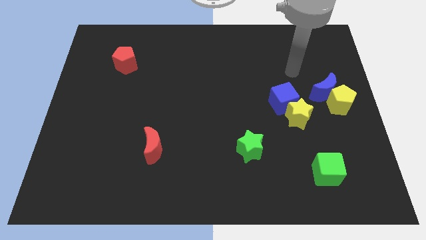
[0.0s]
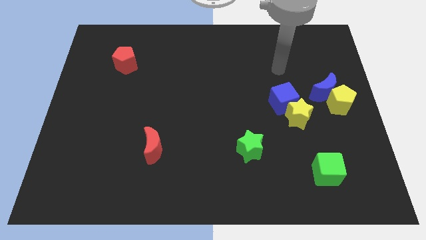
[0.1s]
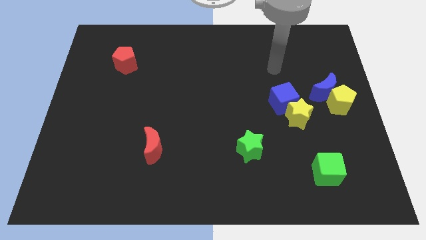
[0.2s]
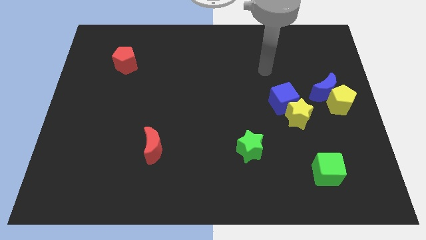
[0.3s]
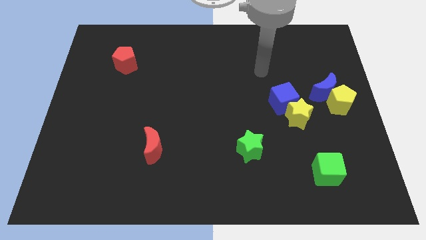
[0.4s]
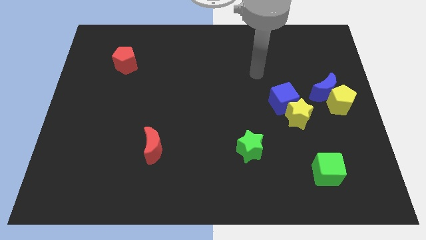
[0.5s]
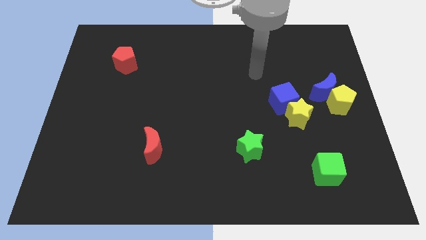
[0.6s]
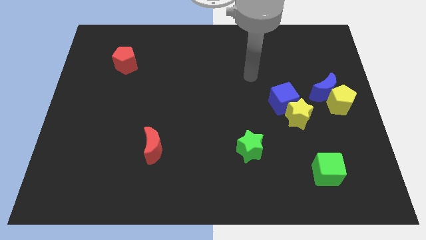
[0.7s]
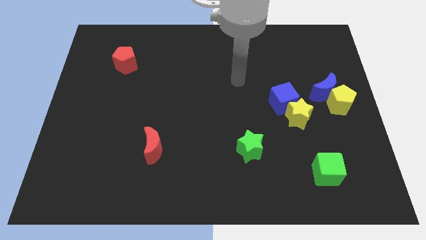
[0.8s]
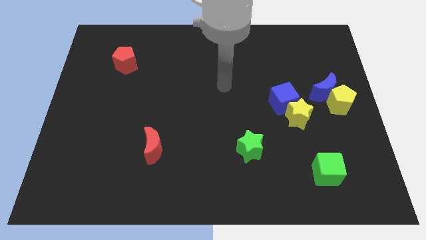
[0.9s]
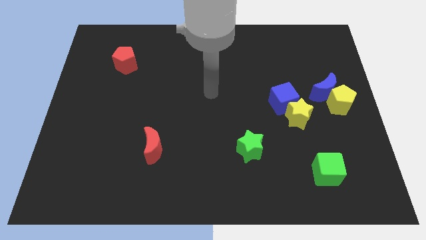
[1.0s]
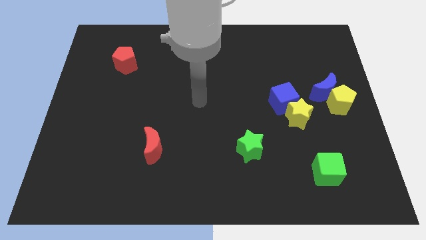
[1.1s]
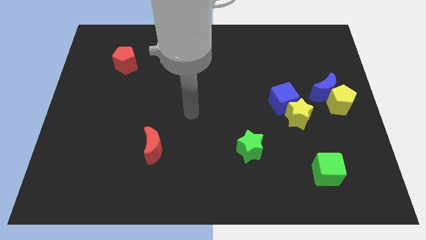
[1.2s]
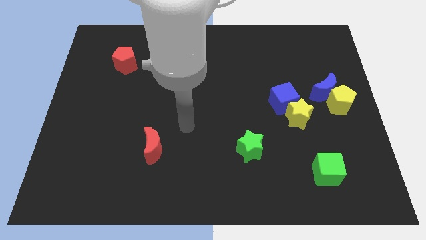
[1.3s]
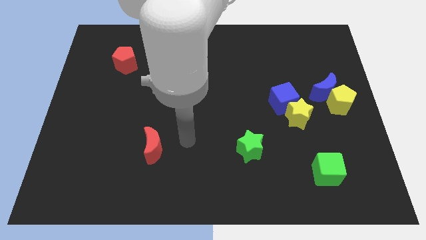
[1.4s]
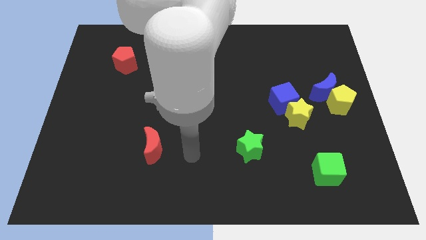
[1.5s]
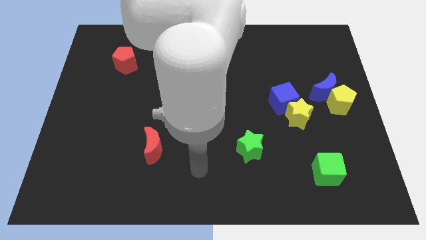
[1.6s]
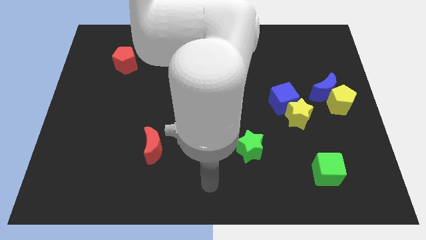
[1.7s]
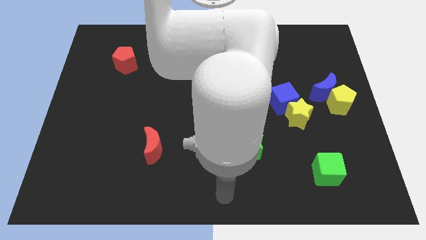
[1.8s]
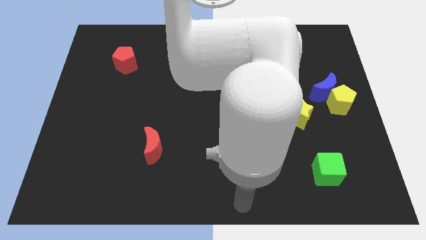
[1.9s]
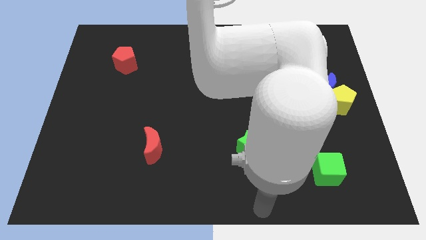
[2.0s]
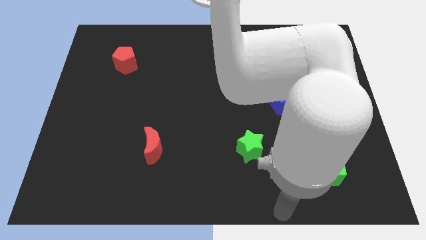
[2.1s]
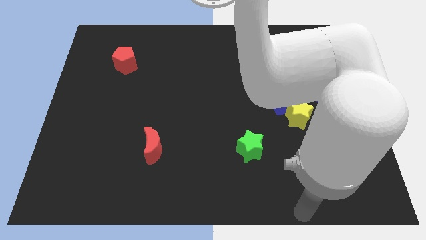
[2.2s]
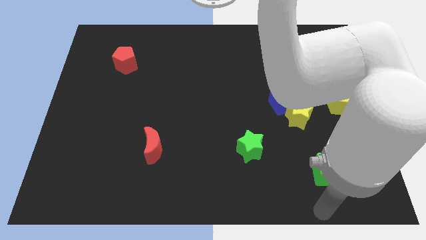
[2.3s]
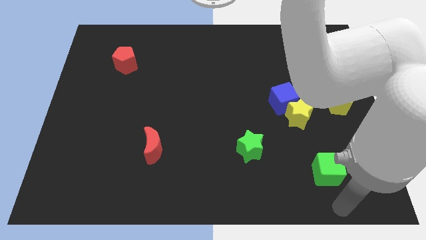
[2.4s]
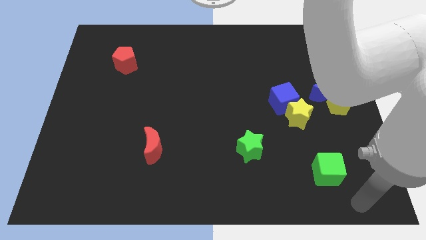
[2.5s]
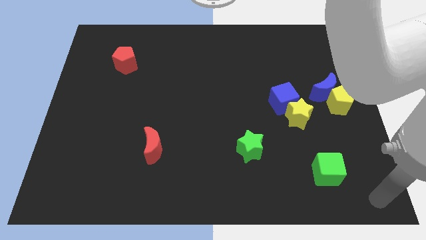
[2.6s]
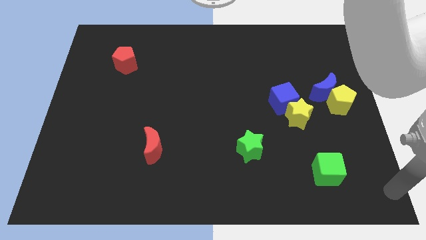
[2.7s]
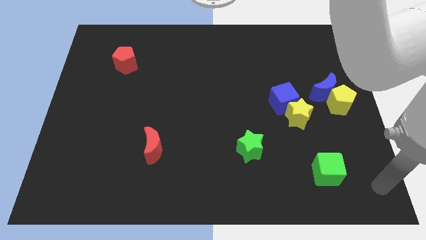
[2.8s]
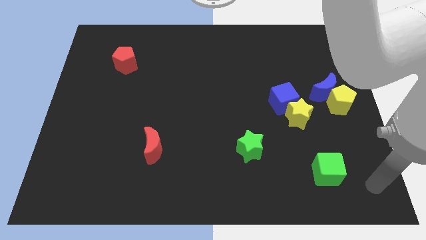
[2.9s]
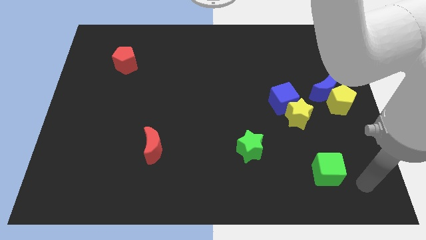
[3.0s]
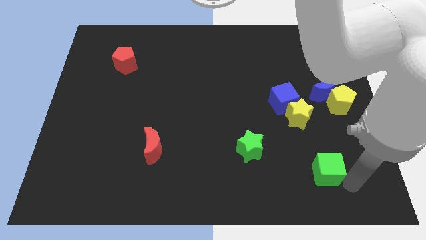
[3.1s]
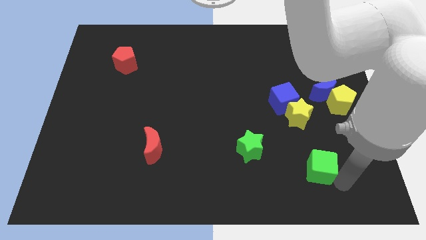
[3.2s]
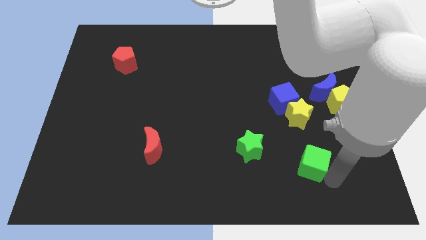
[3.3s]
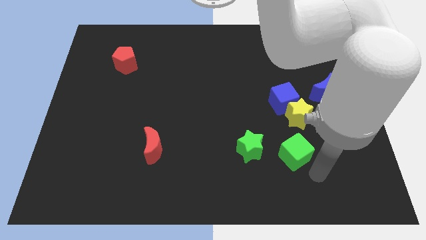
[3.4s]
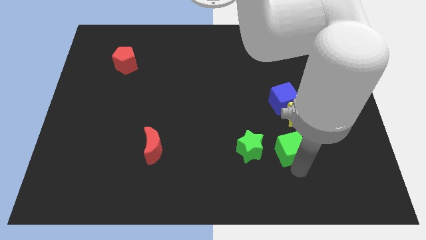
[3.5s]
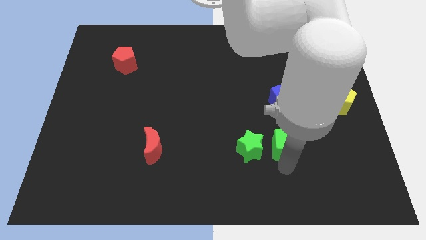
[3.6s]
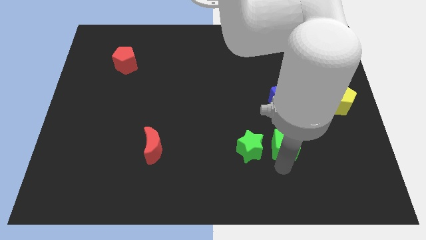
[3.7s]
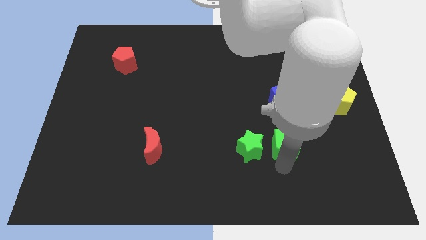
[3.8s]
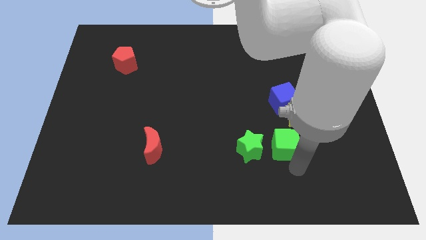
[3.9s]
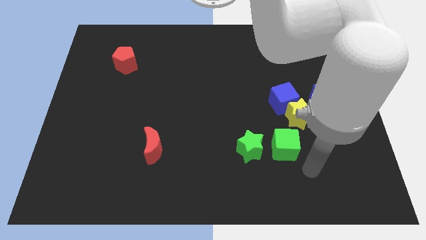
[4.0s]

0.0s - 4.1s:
push the green cube to the right of the green star

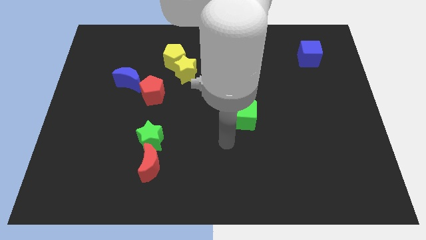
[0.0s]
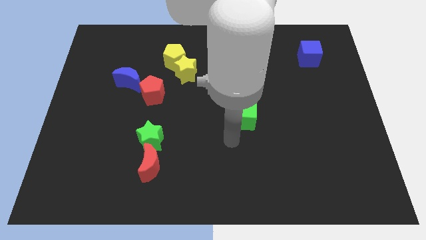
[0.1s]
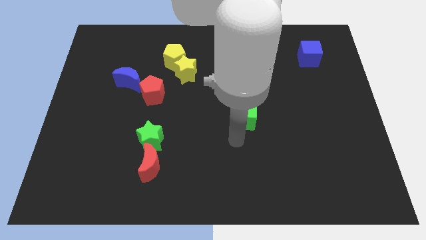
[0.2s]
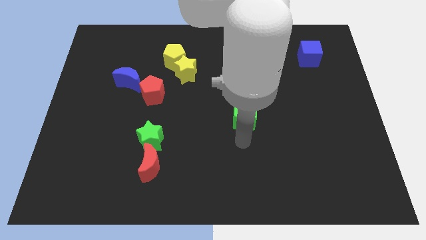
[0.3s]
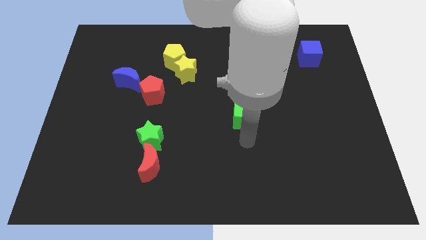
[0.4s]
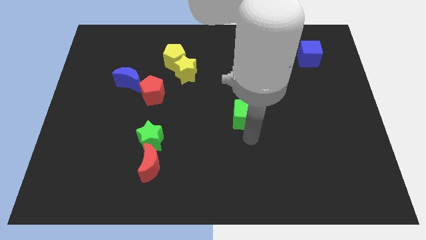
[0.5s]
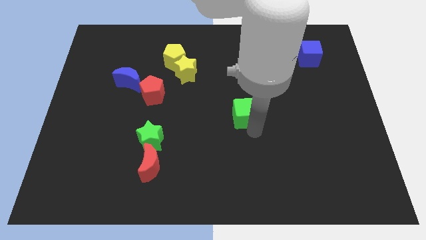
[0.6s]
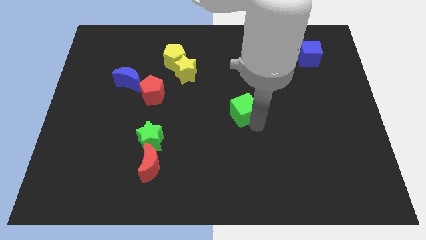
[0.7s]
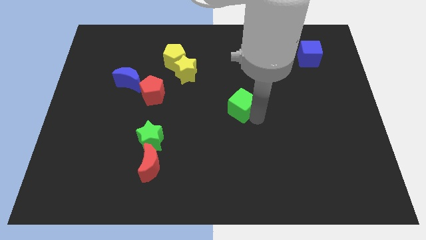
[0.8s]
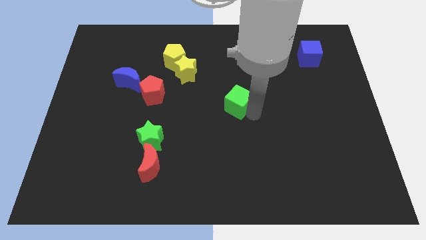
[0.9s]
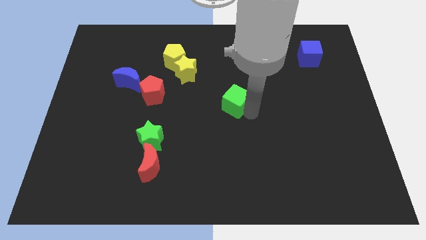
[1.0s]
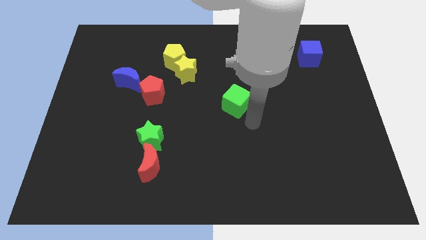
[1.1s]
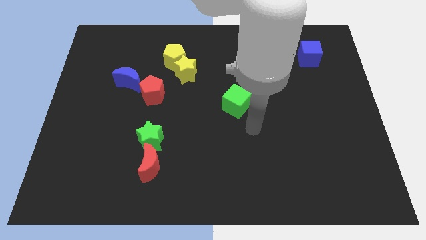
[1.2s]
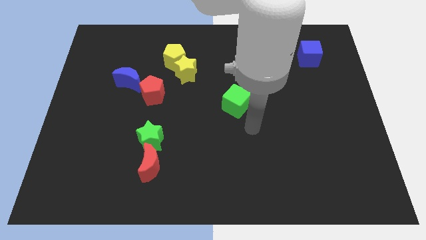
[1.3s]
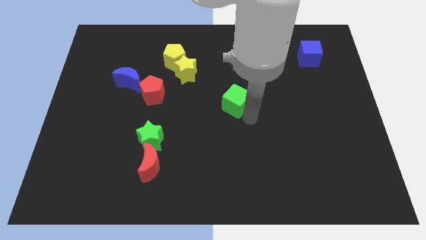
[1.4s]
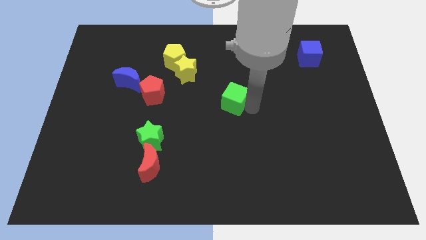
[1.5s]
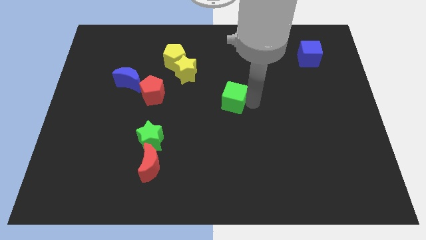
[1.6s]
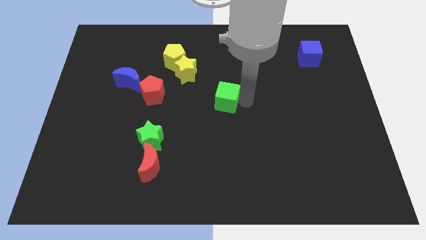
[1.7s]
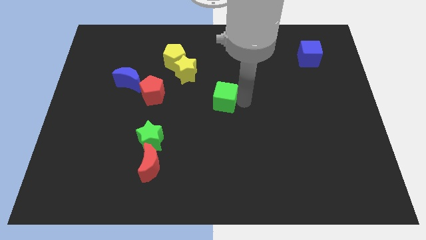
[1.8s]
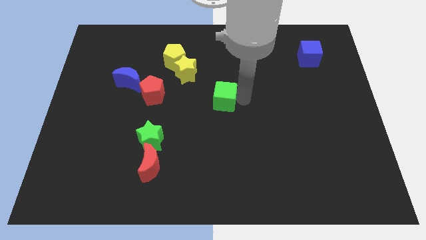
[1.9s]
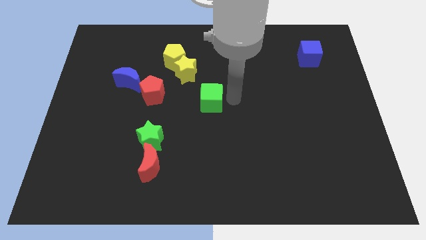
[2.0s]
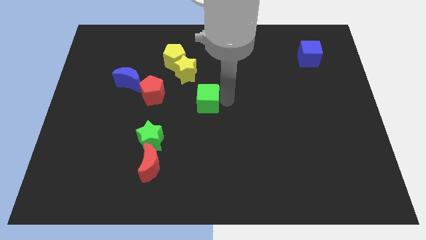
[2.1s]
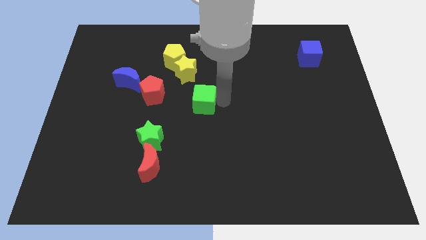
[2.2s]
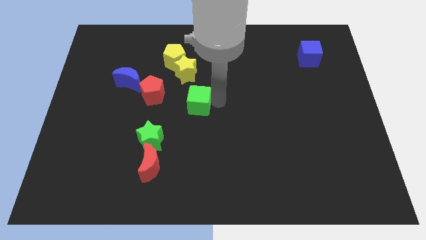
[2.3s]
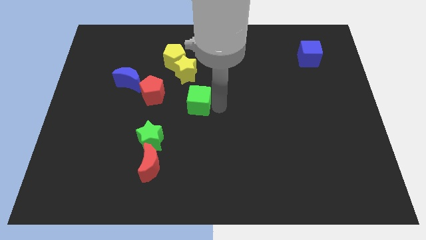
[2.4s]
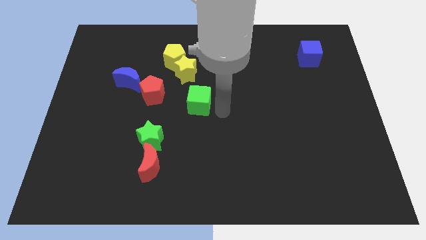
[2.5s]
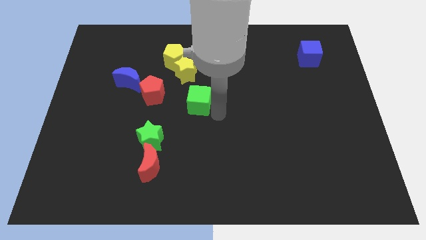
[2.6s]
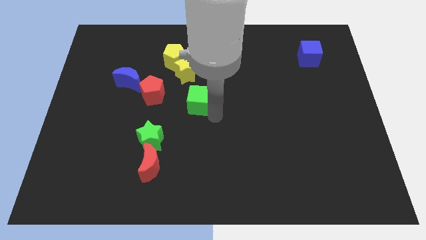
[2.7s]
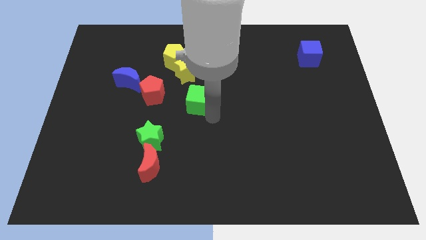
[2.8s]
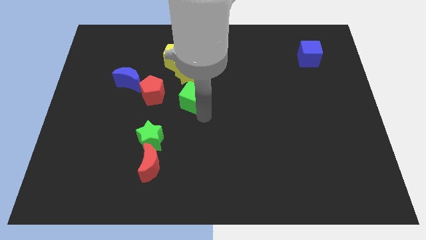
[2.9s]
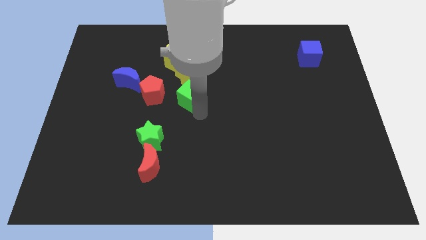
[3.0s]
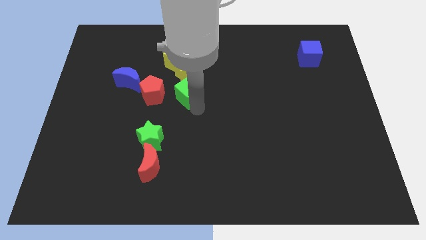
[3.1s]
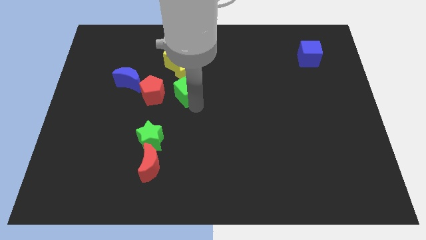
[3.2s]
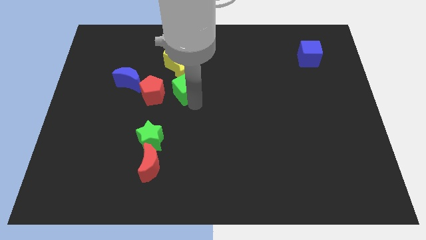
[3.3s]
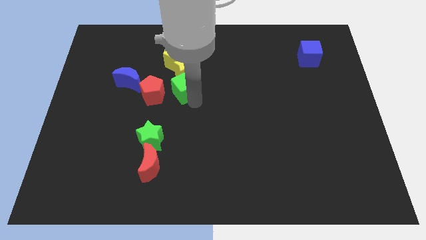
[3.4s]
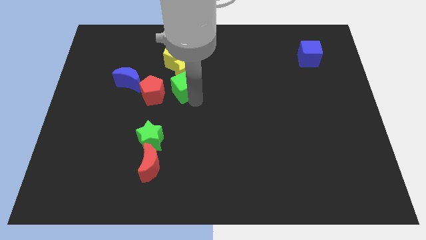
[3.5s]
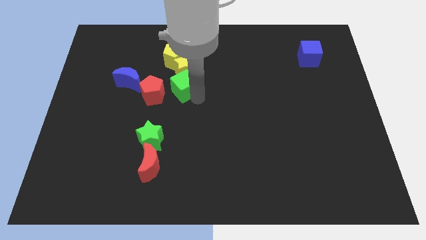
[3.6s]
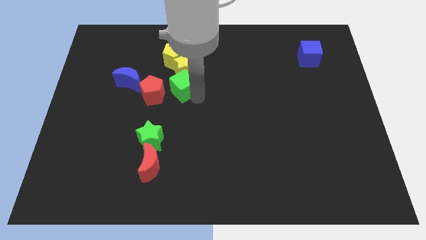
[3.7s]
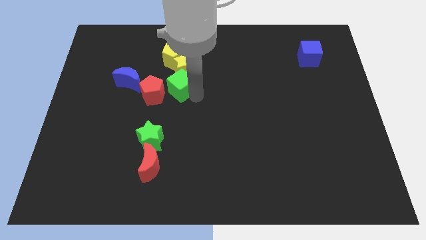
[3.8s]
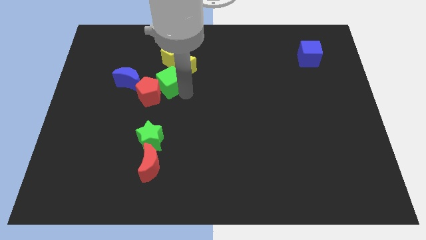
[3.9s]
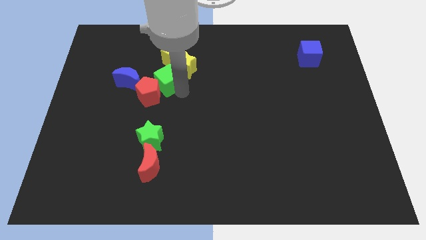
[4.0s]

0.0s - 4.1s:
push the green cube into the yellow star

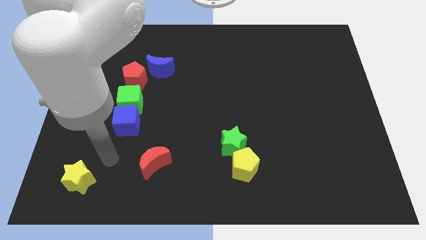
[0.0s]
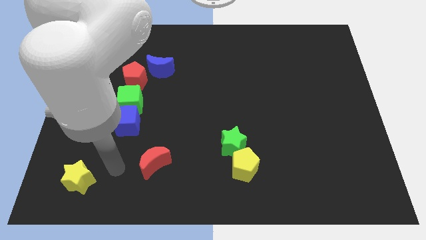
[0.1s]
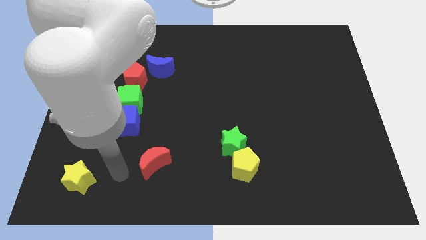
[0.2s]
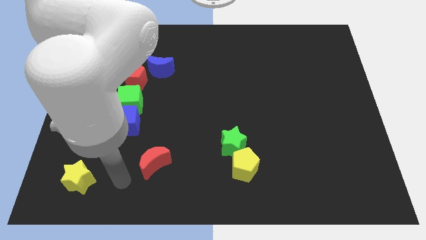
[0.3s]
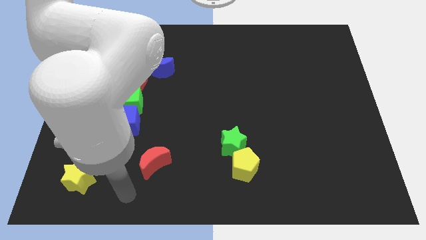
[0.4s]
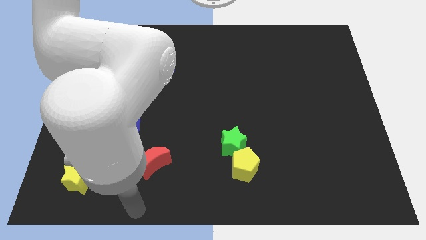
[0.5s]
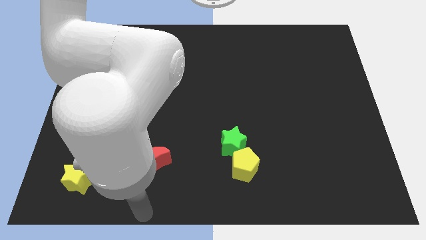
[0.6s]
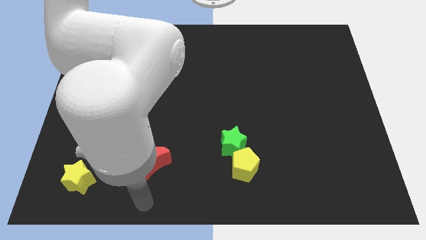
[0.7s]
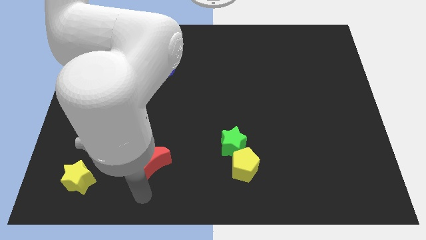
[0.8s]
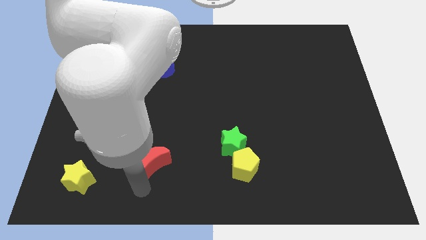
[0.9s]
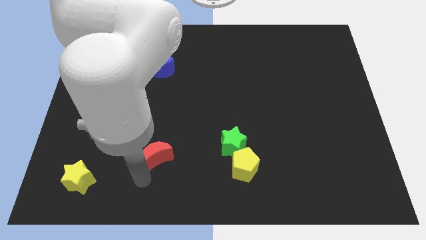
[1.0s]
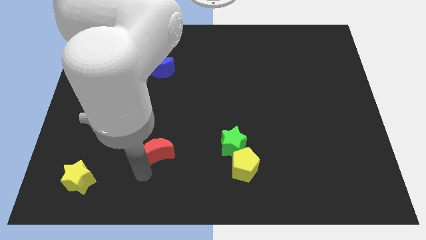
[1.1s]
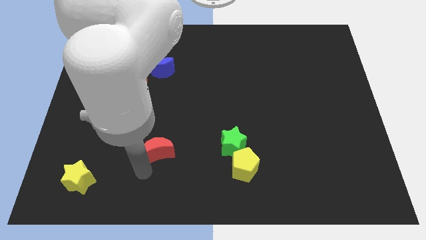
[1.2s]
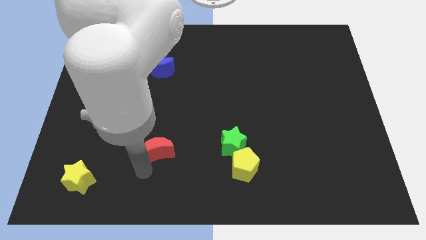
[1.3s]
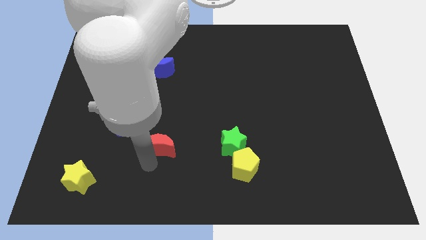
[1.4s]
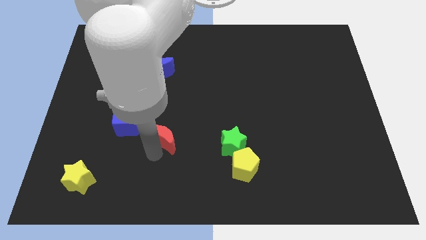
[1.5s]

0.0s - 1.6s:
slightly push the red crescent to the left of the green star
